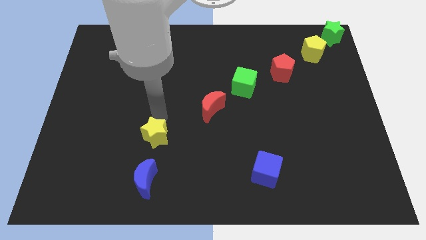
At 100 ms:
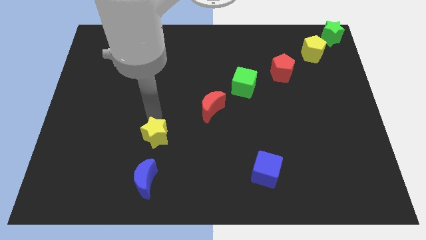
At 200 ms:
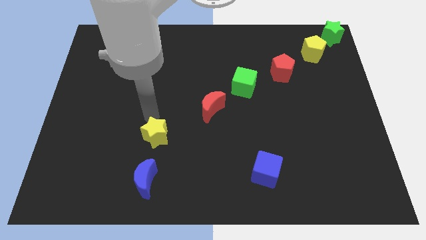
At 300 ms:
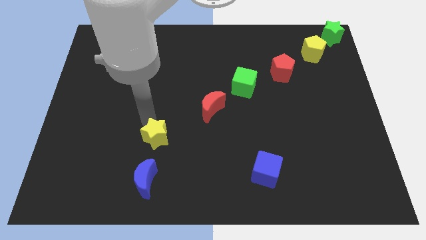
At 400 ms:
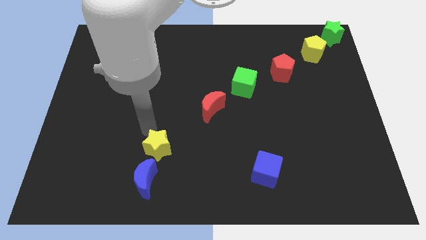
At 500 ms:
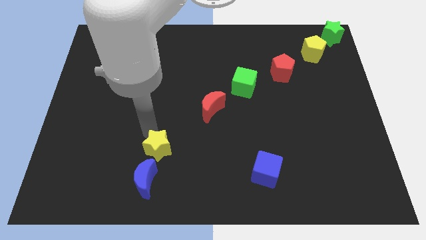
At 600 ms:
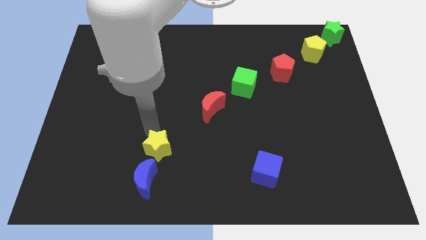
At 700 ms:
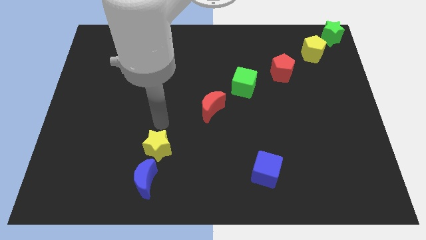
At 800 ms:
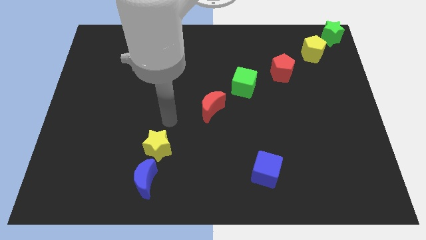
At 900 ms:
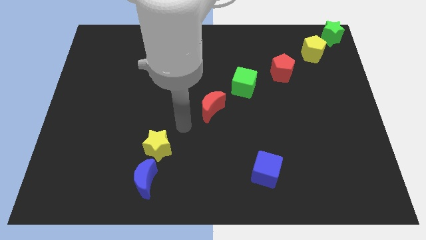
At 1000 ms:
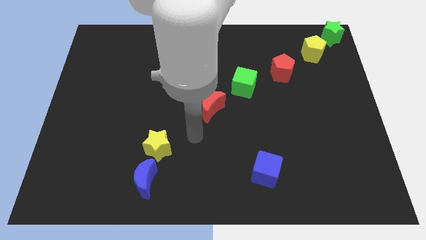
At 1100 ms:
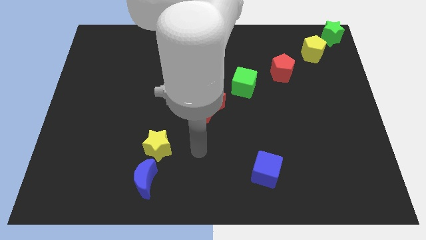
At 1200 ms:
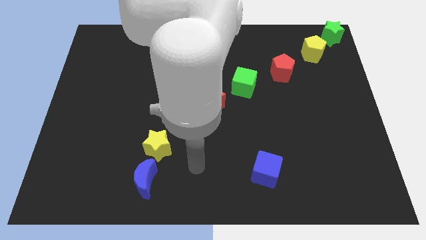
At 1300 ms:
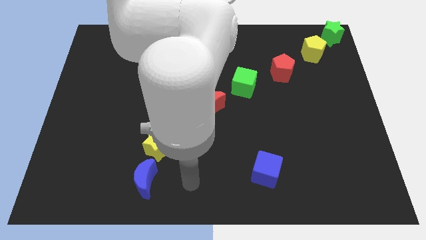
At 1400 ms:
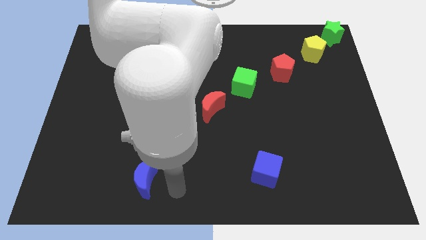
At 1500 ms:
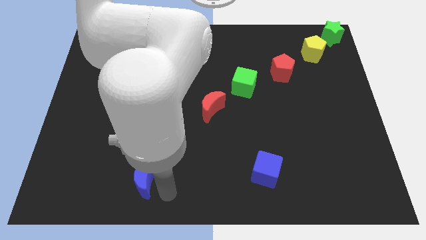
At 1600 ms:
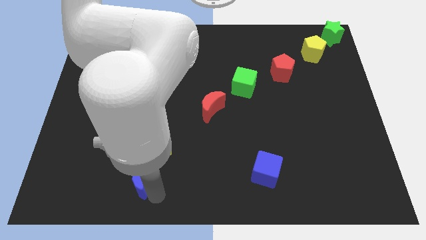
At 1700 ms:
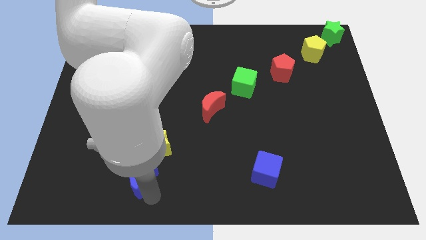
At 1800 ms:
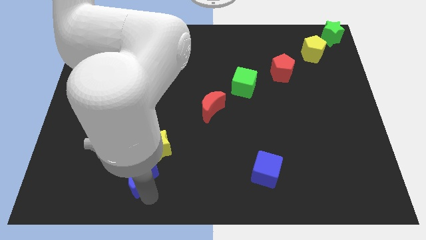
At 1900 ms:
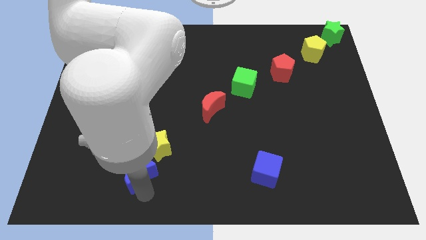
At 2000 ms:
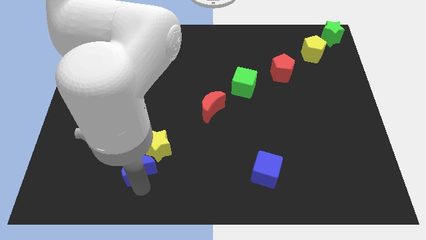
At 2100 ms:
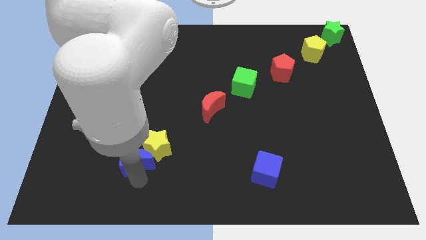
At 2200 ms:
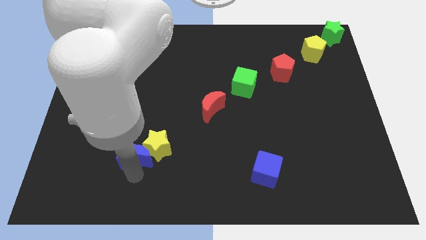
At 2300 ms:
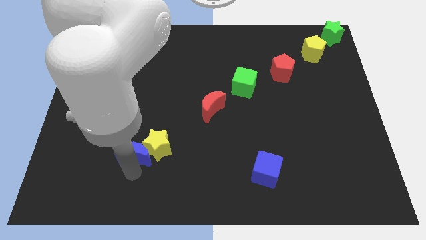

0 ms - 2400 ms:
push blue crescent diagonal to yellow star

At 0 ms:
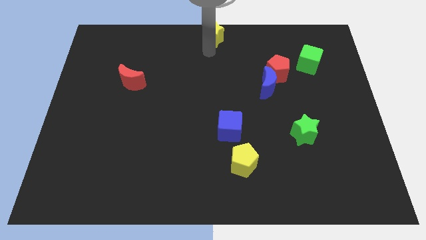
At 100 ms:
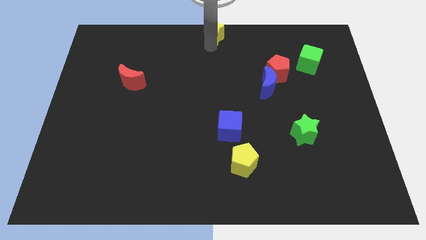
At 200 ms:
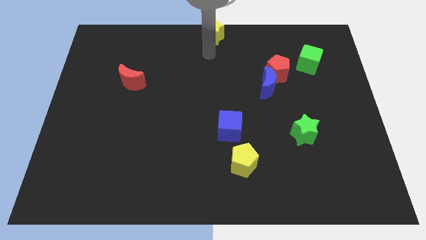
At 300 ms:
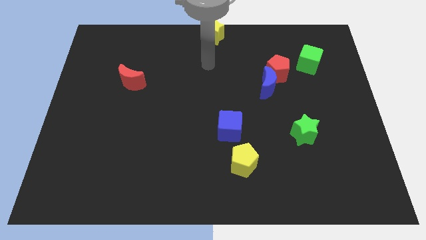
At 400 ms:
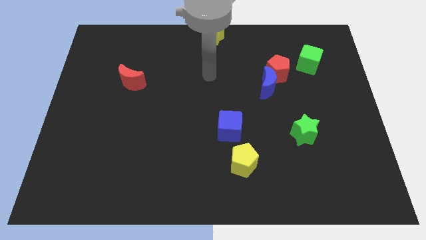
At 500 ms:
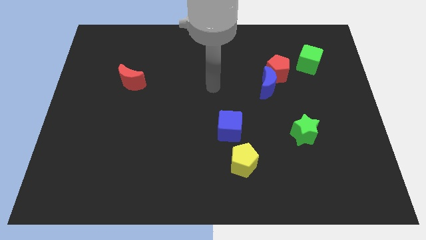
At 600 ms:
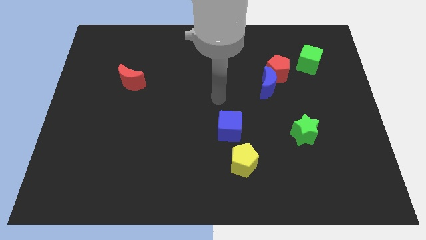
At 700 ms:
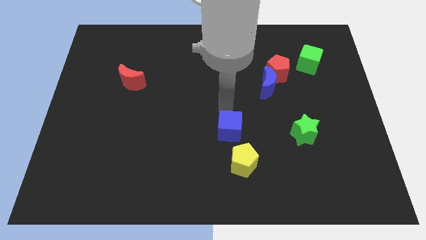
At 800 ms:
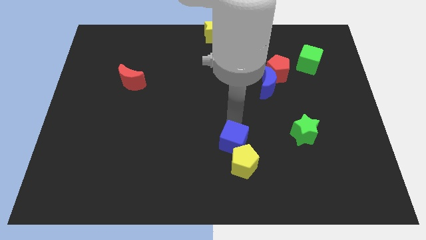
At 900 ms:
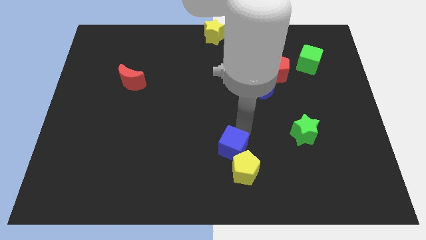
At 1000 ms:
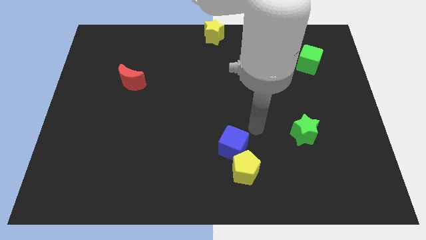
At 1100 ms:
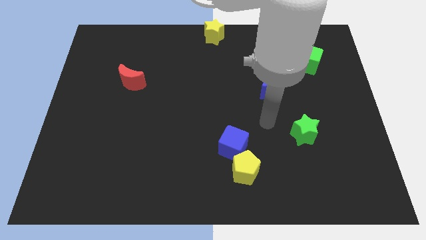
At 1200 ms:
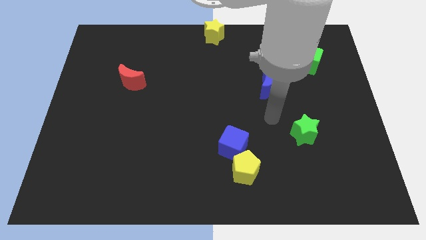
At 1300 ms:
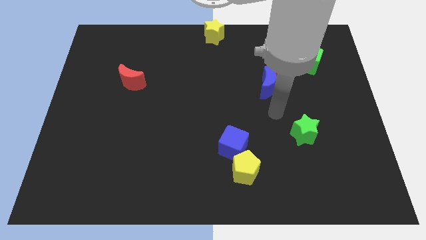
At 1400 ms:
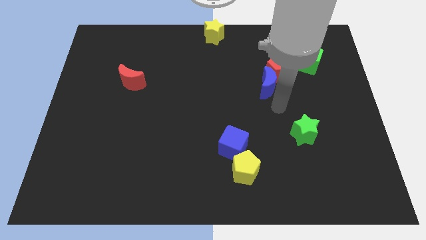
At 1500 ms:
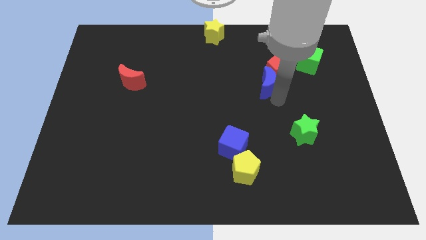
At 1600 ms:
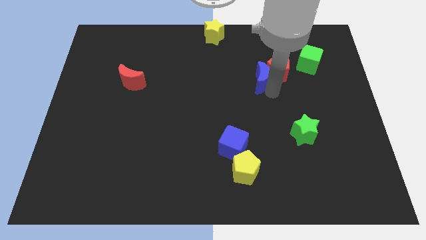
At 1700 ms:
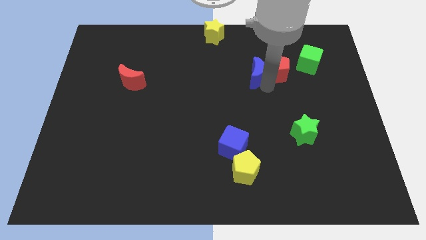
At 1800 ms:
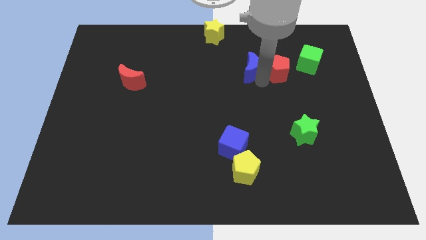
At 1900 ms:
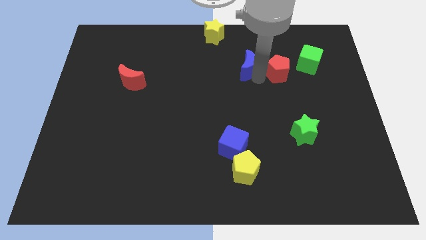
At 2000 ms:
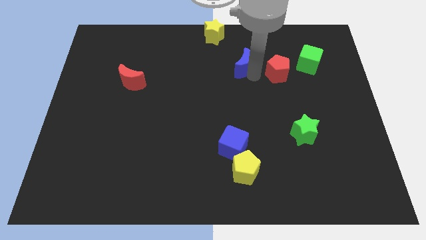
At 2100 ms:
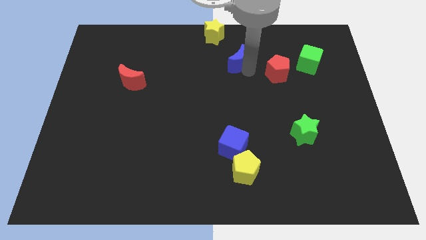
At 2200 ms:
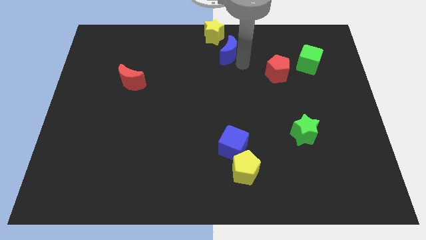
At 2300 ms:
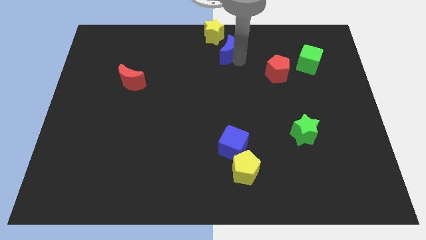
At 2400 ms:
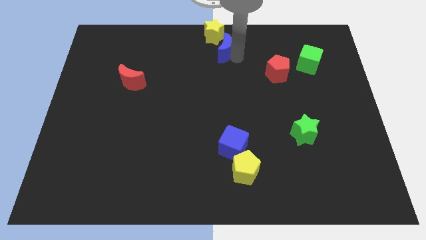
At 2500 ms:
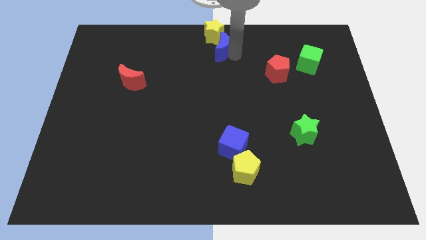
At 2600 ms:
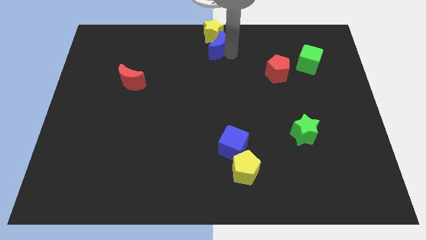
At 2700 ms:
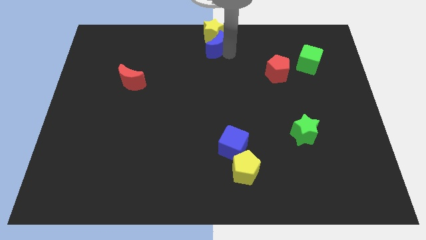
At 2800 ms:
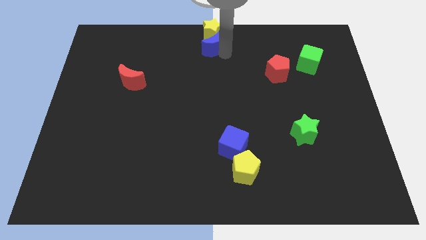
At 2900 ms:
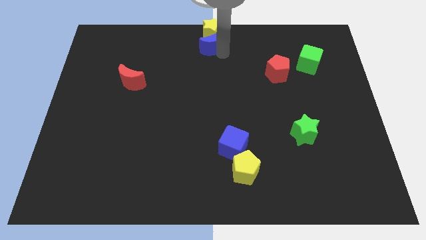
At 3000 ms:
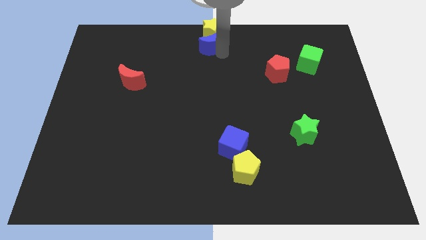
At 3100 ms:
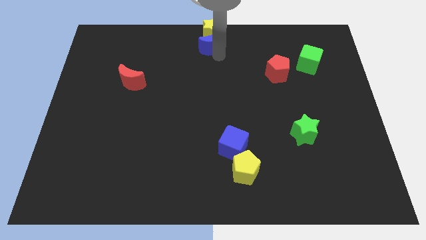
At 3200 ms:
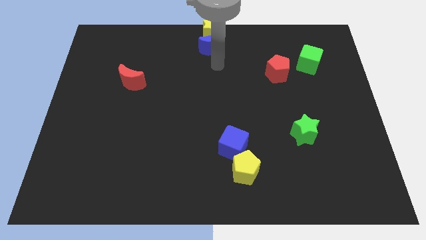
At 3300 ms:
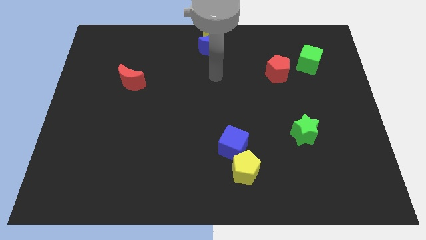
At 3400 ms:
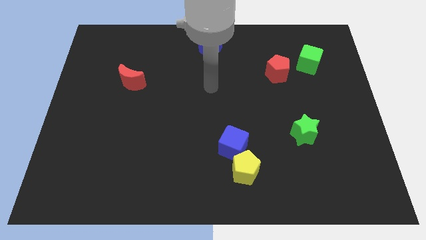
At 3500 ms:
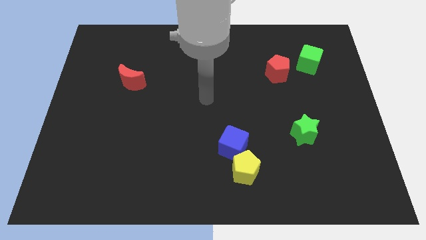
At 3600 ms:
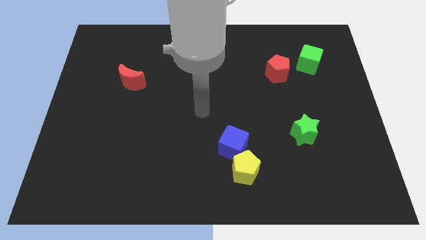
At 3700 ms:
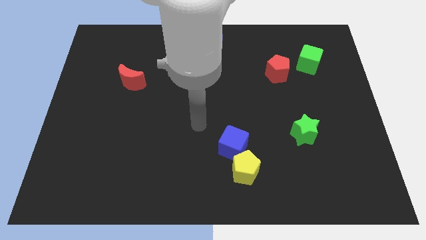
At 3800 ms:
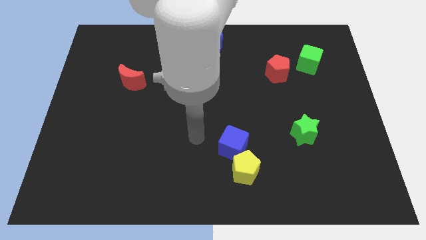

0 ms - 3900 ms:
separate the blue moon from the red pentagon

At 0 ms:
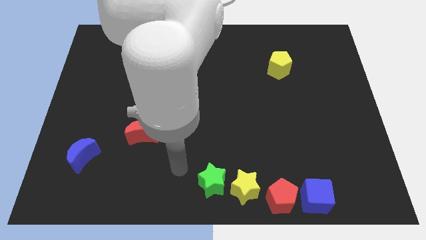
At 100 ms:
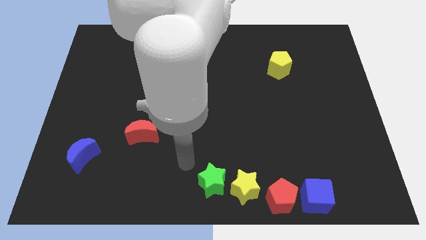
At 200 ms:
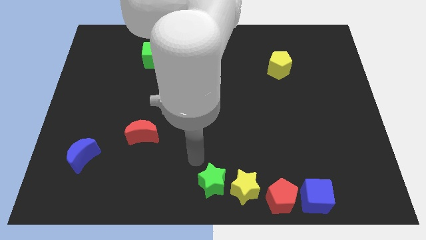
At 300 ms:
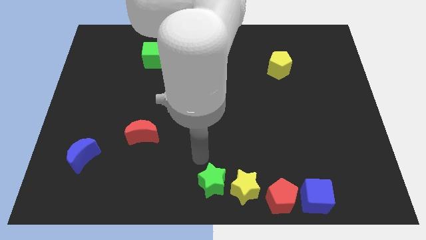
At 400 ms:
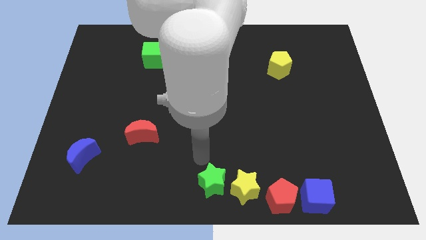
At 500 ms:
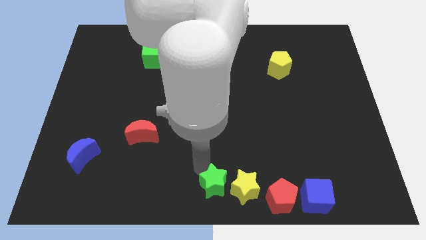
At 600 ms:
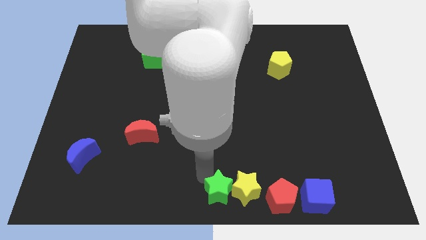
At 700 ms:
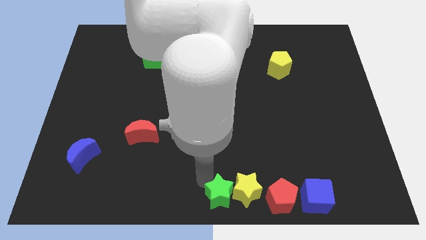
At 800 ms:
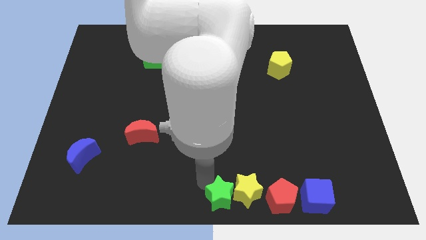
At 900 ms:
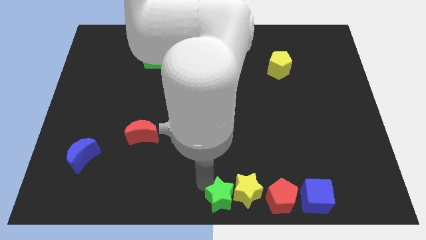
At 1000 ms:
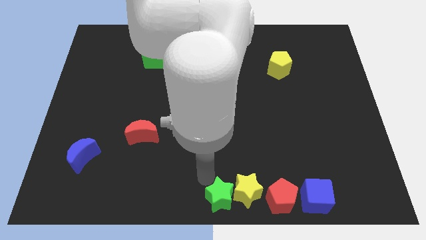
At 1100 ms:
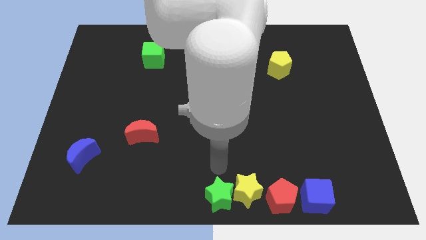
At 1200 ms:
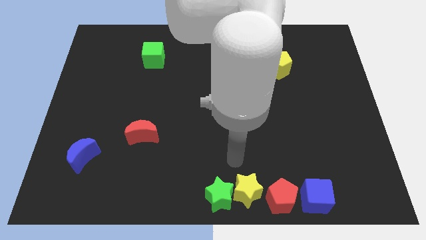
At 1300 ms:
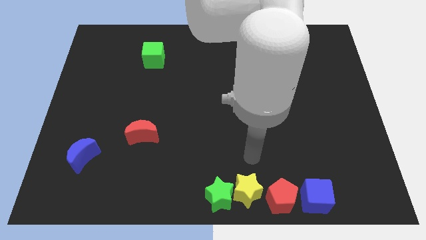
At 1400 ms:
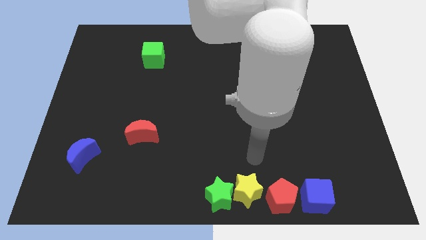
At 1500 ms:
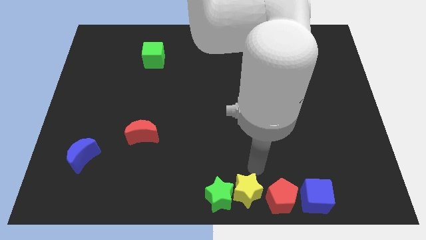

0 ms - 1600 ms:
slide the green star into the yellow star

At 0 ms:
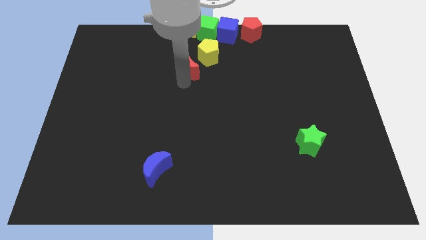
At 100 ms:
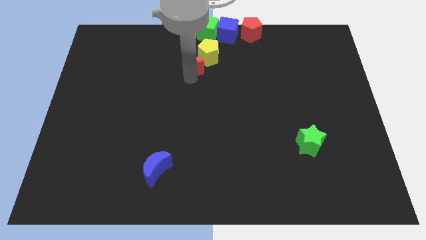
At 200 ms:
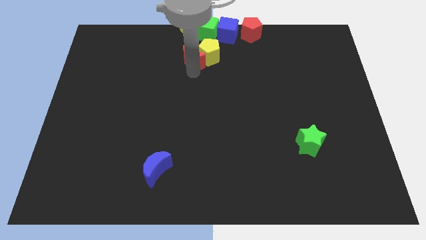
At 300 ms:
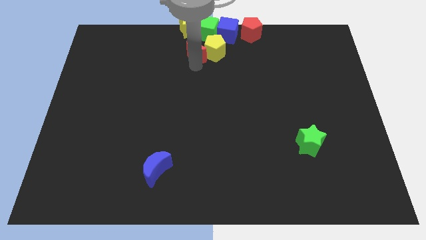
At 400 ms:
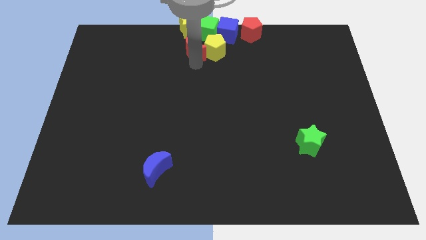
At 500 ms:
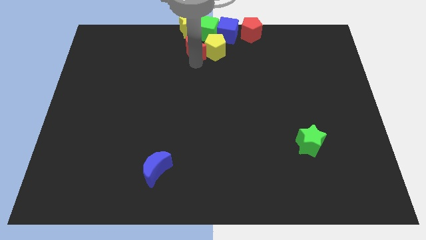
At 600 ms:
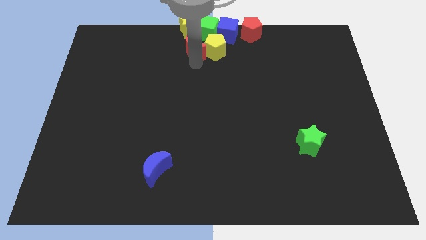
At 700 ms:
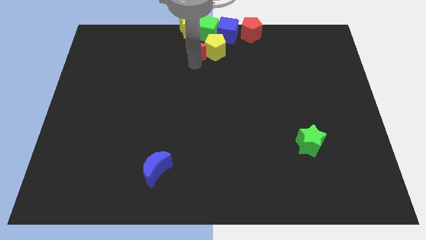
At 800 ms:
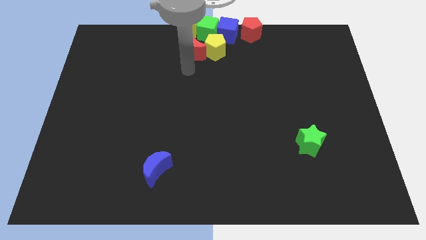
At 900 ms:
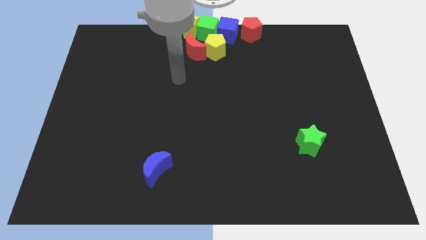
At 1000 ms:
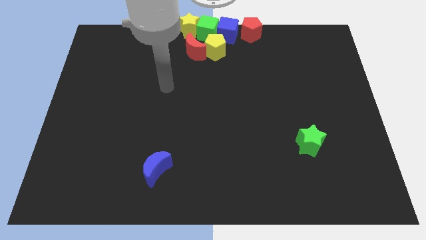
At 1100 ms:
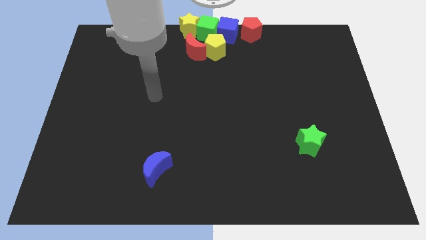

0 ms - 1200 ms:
push the red crescent to the left of the yellow pentagon
